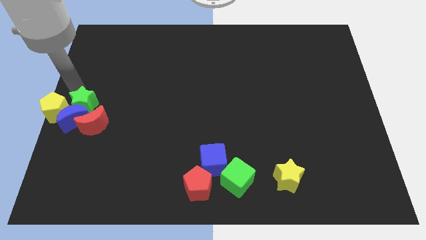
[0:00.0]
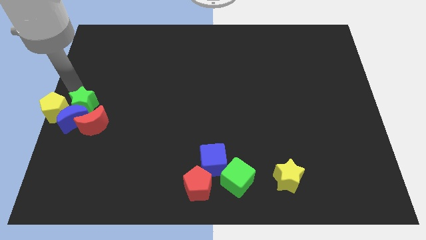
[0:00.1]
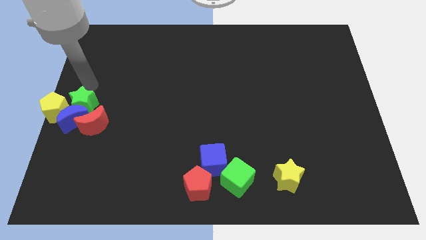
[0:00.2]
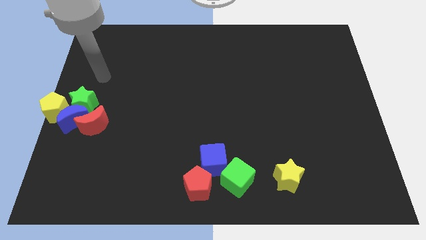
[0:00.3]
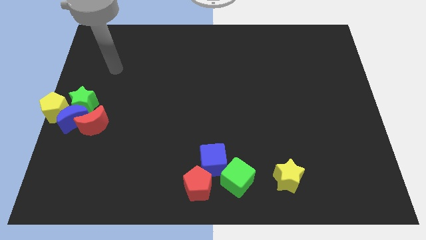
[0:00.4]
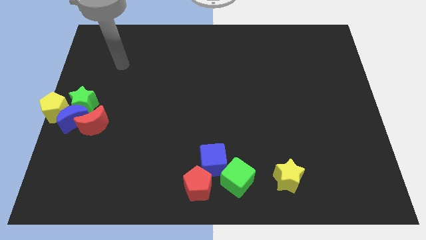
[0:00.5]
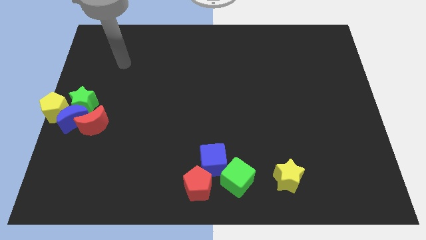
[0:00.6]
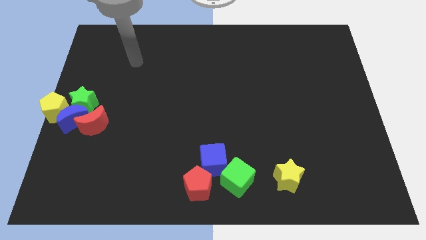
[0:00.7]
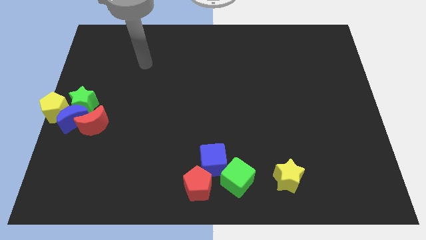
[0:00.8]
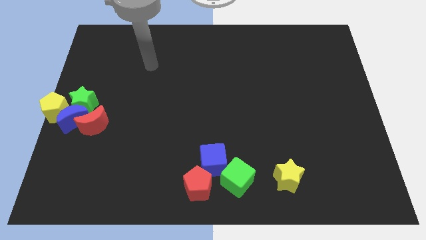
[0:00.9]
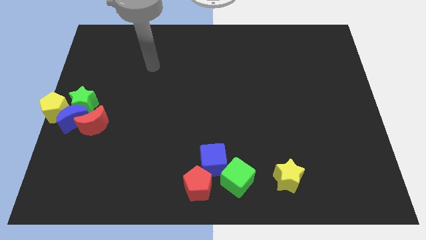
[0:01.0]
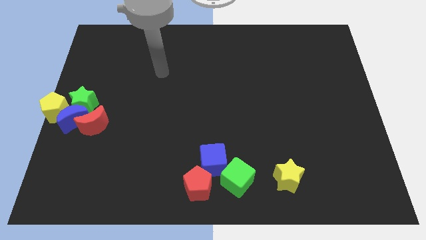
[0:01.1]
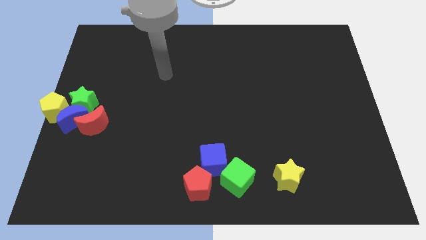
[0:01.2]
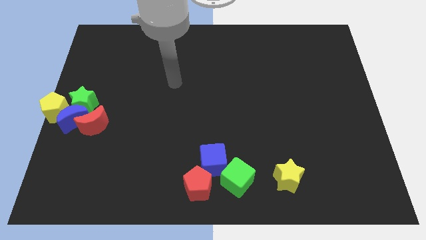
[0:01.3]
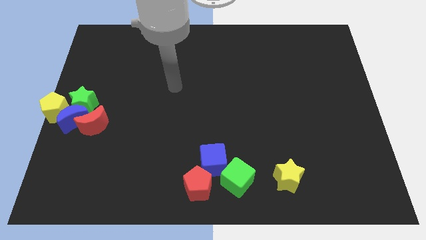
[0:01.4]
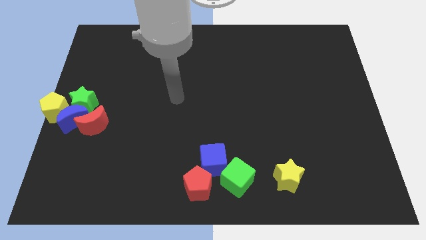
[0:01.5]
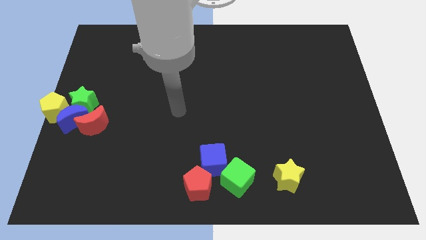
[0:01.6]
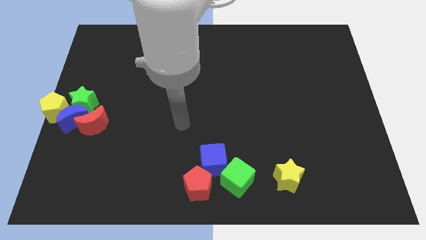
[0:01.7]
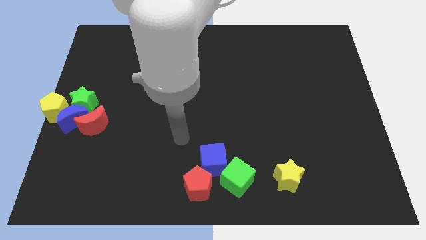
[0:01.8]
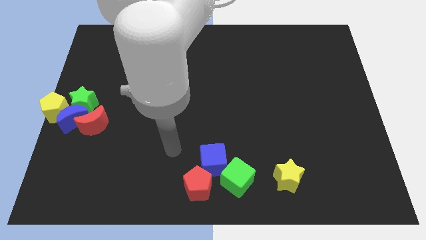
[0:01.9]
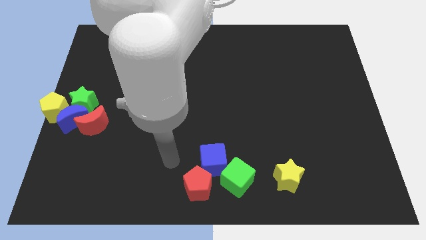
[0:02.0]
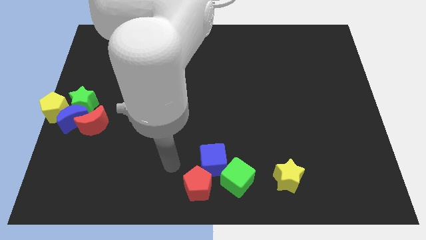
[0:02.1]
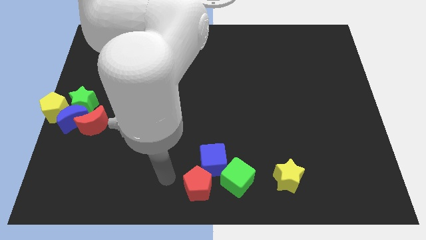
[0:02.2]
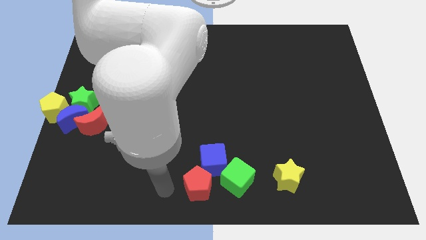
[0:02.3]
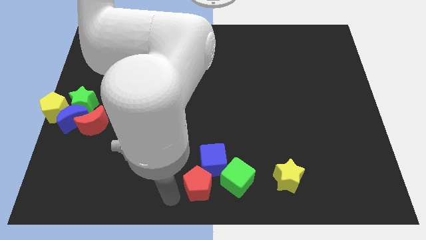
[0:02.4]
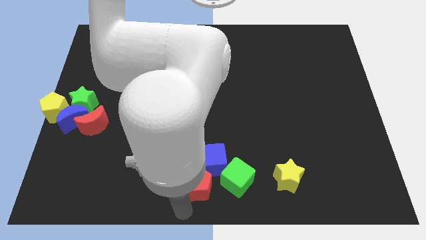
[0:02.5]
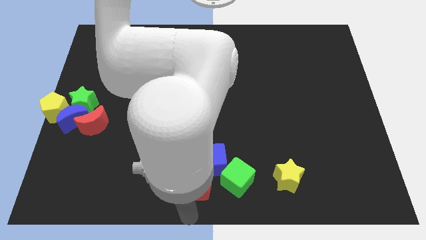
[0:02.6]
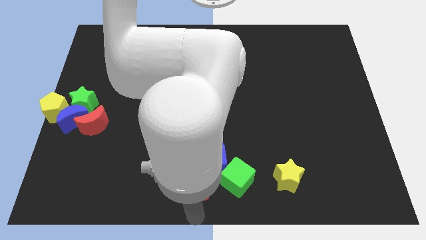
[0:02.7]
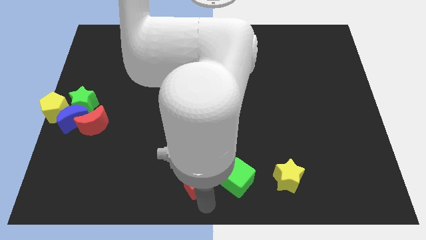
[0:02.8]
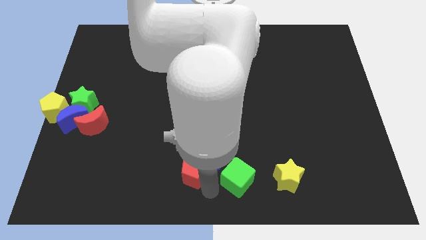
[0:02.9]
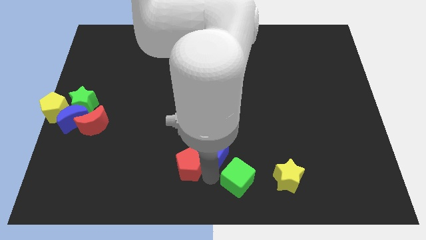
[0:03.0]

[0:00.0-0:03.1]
place the arm at the bottom of the red pentagon

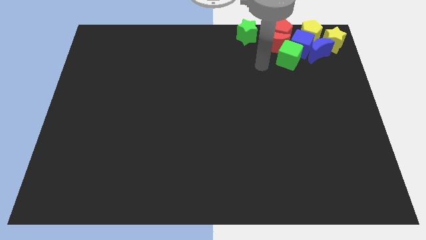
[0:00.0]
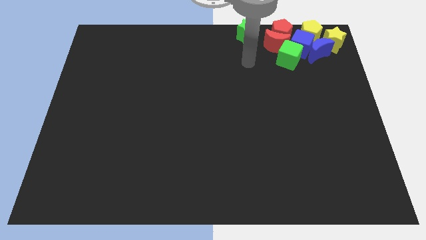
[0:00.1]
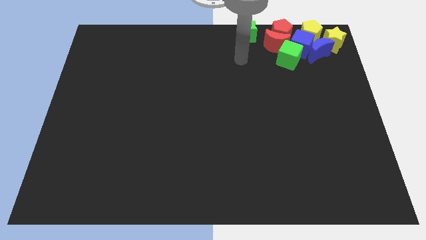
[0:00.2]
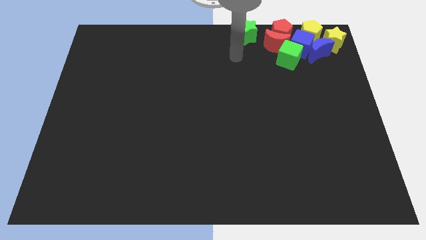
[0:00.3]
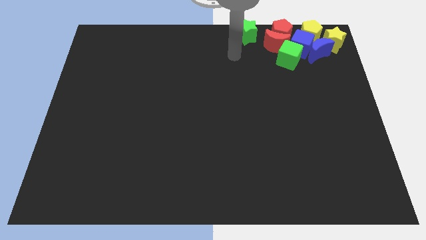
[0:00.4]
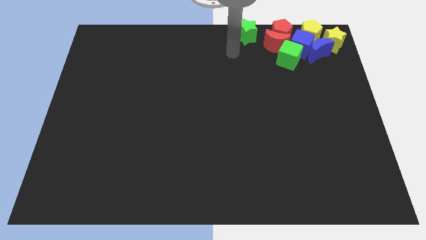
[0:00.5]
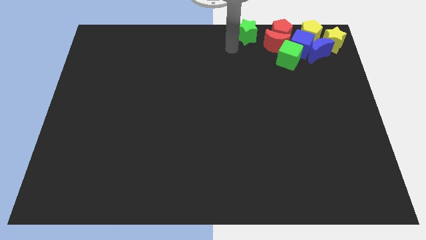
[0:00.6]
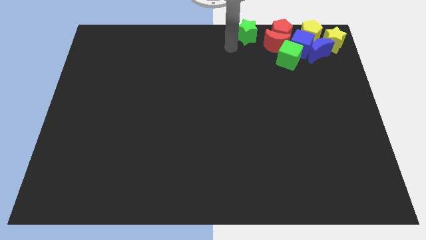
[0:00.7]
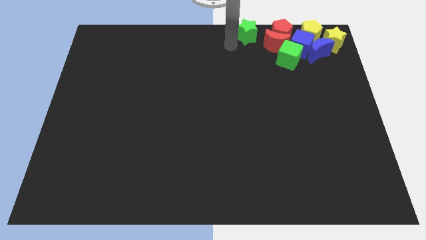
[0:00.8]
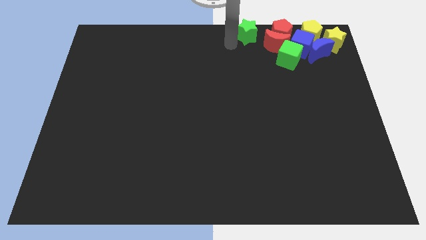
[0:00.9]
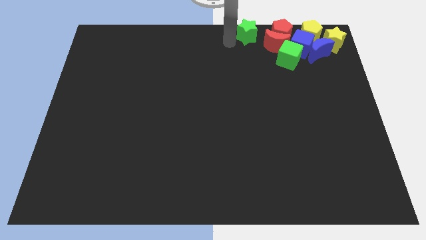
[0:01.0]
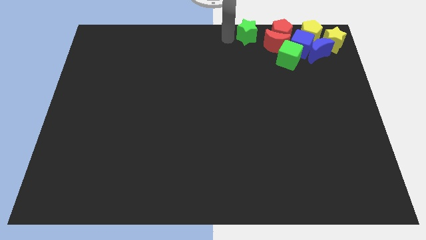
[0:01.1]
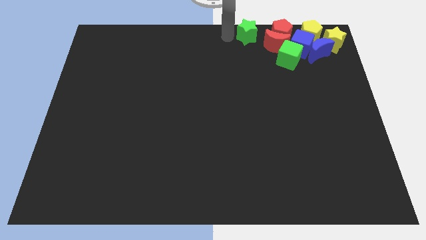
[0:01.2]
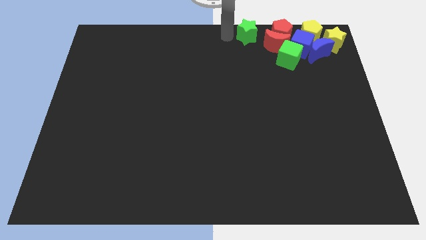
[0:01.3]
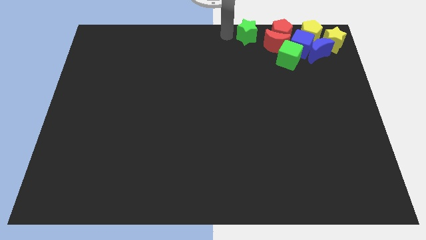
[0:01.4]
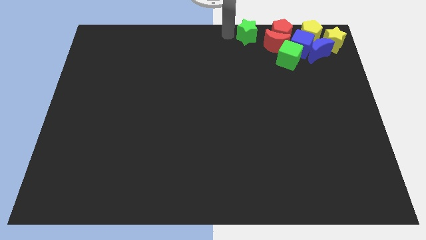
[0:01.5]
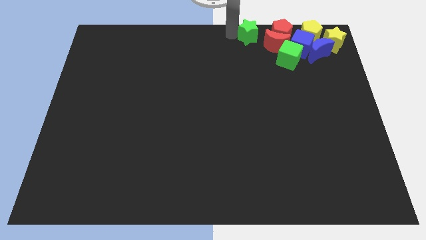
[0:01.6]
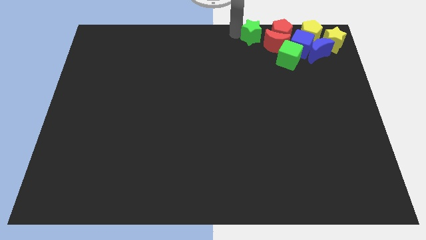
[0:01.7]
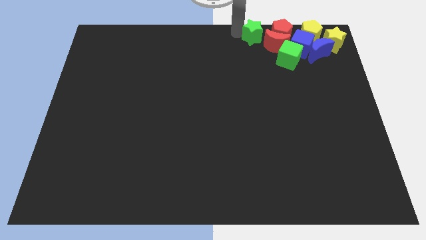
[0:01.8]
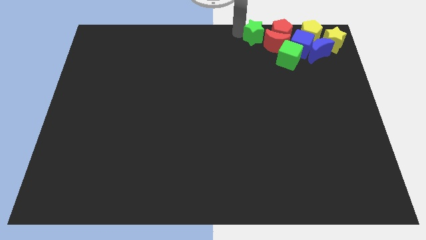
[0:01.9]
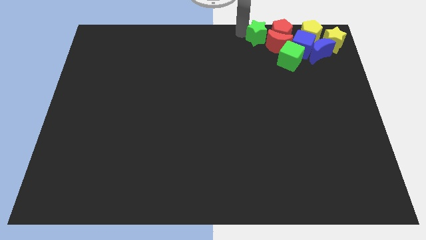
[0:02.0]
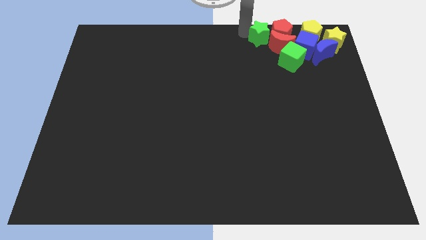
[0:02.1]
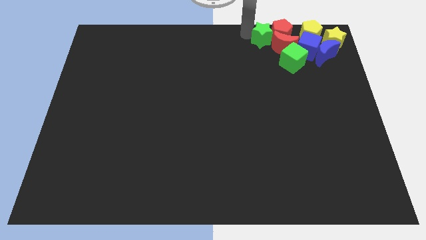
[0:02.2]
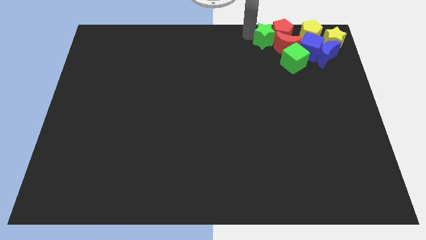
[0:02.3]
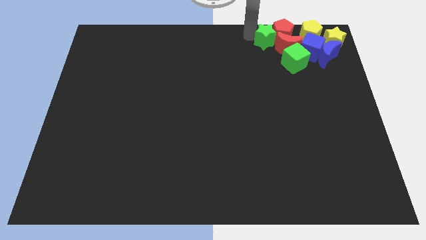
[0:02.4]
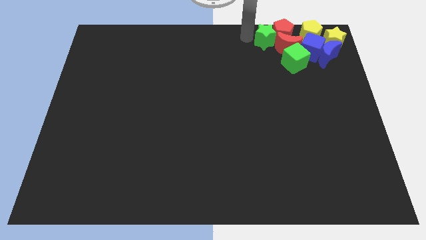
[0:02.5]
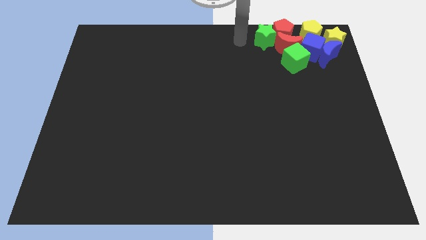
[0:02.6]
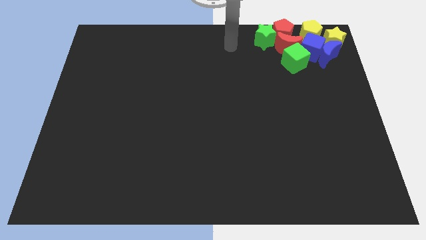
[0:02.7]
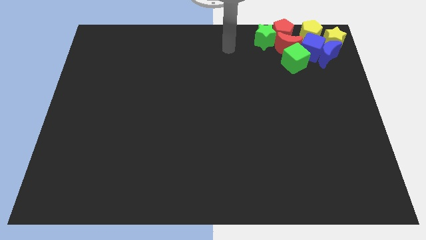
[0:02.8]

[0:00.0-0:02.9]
push the green star into the red blocks

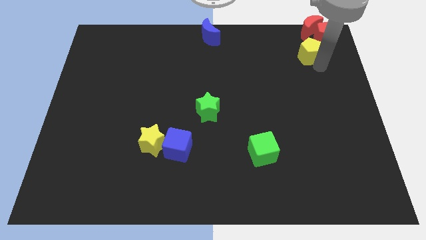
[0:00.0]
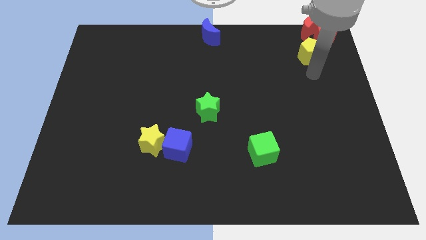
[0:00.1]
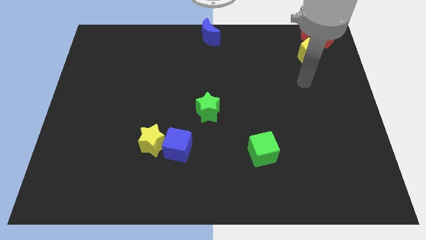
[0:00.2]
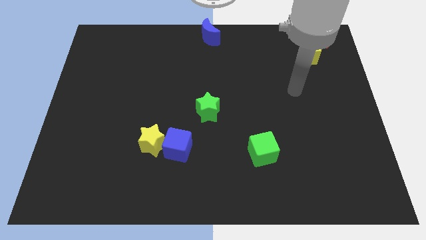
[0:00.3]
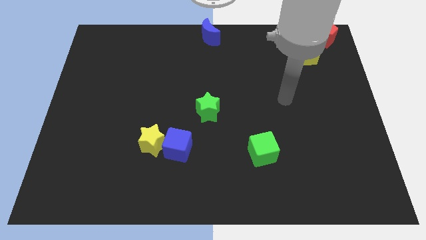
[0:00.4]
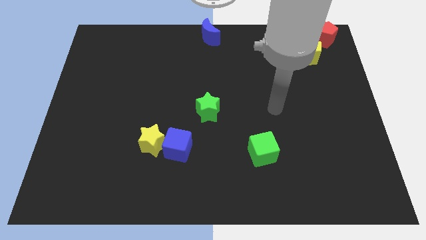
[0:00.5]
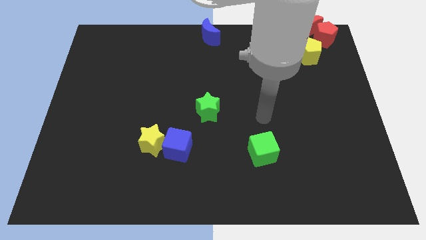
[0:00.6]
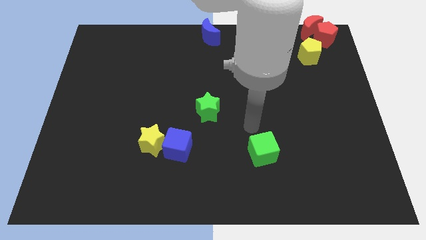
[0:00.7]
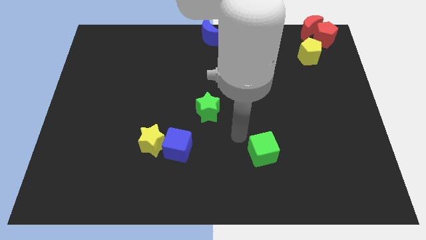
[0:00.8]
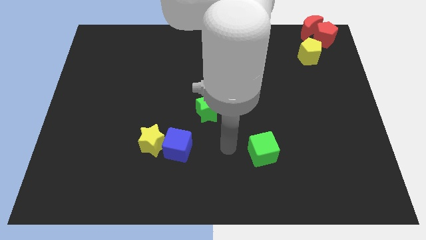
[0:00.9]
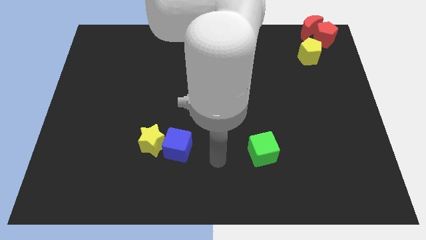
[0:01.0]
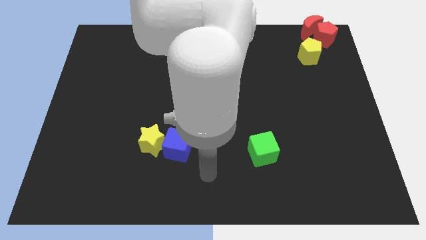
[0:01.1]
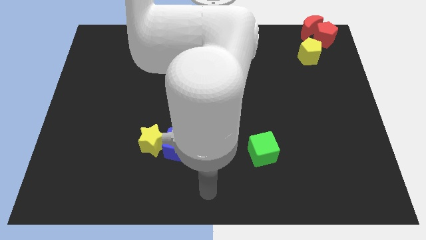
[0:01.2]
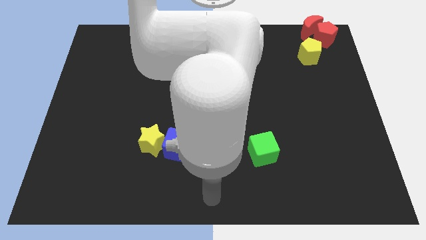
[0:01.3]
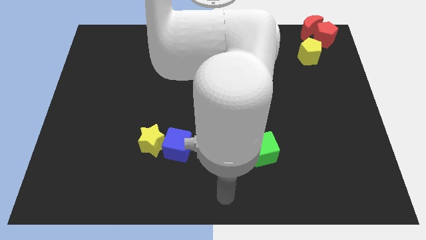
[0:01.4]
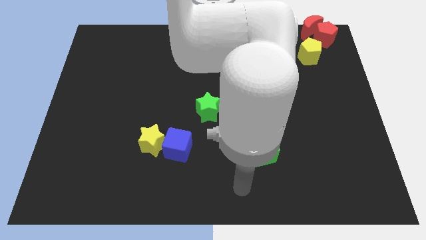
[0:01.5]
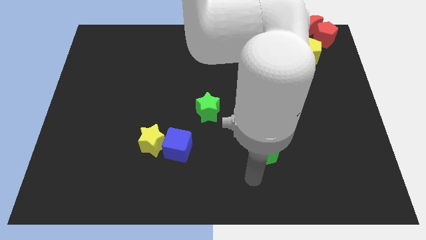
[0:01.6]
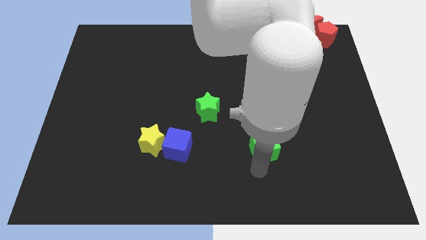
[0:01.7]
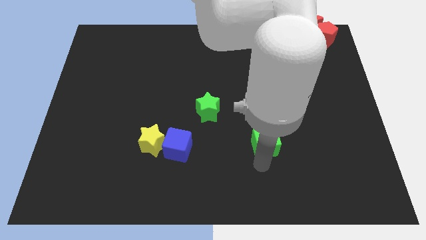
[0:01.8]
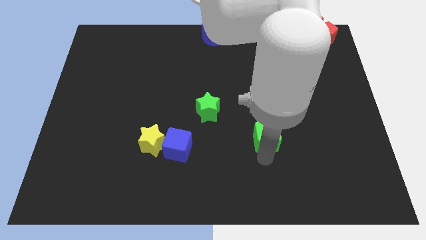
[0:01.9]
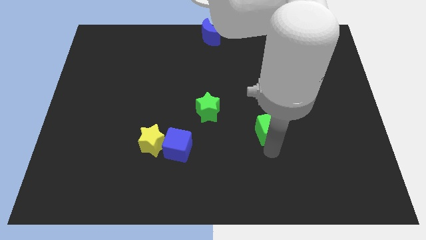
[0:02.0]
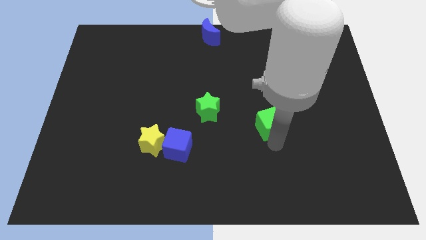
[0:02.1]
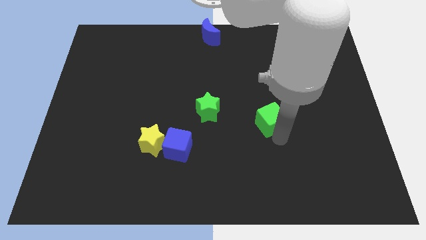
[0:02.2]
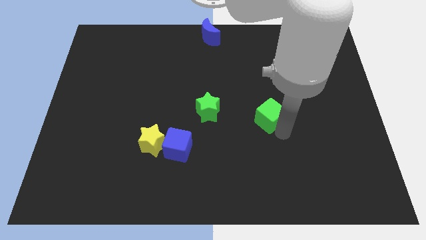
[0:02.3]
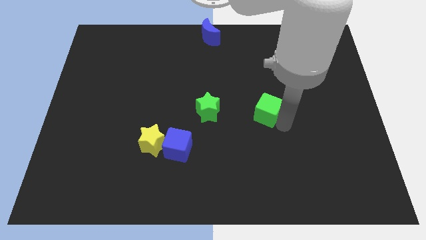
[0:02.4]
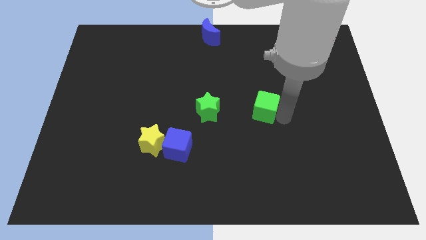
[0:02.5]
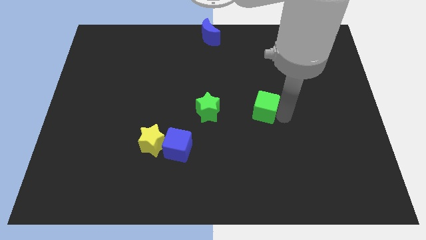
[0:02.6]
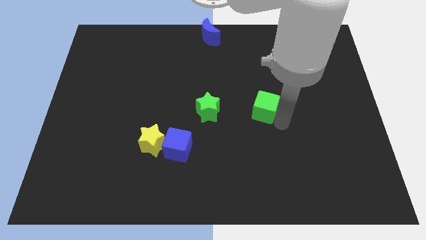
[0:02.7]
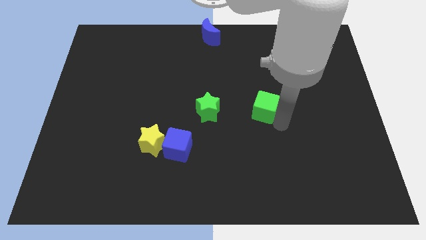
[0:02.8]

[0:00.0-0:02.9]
place the green cube parallel to green star
